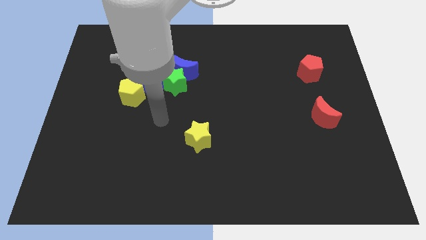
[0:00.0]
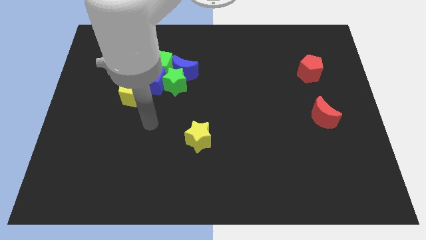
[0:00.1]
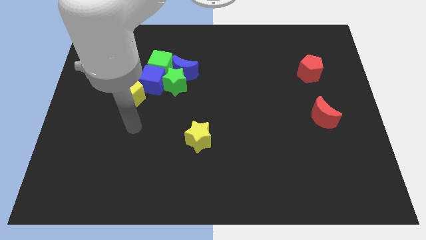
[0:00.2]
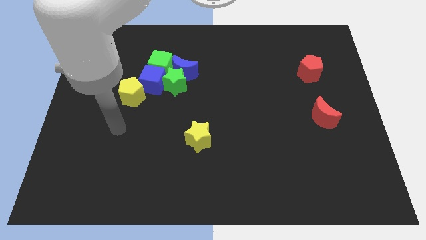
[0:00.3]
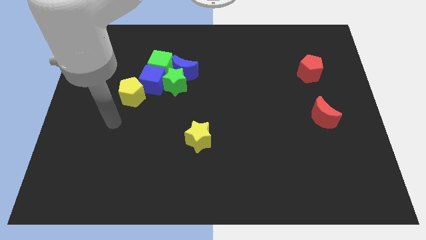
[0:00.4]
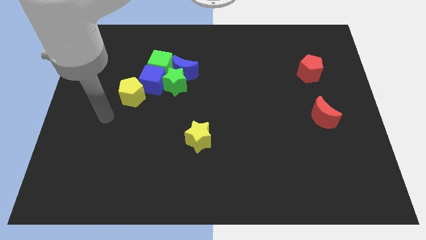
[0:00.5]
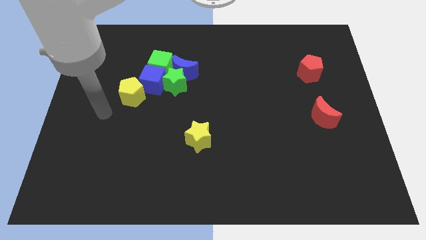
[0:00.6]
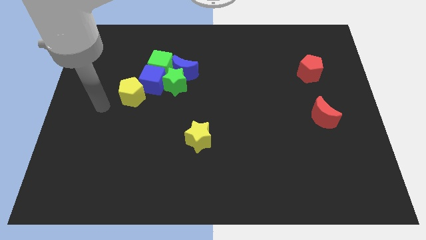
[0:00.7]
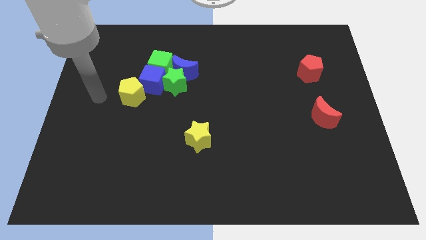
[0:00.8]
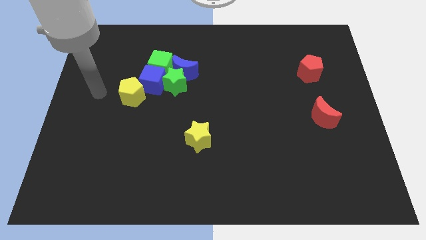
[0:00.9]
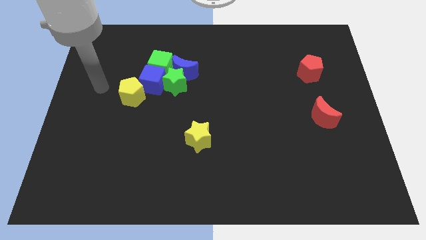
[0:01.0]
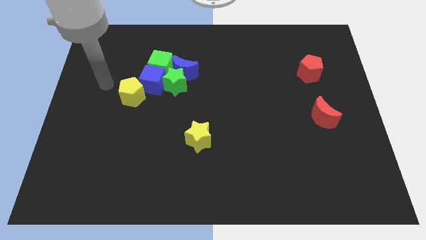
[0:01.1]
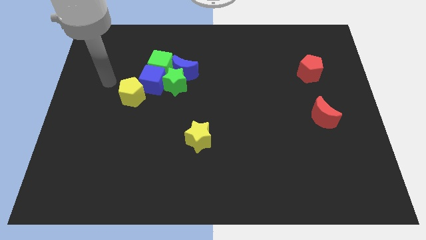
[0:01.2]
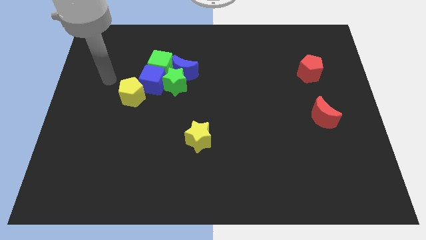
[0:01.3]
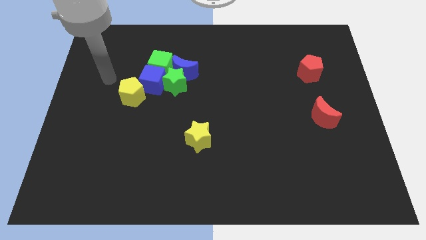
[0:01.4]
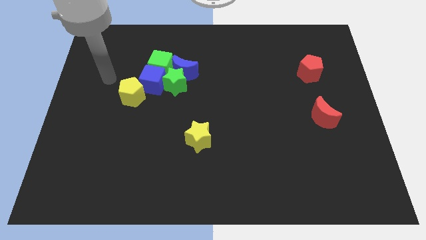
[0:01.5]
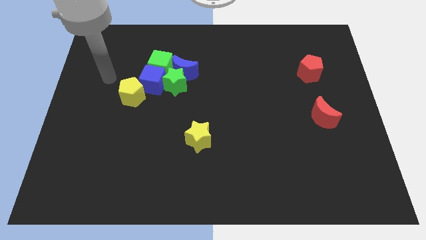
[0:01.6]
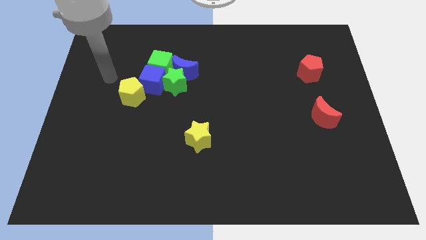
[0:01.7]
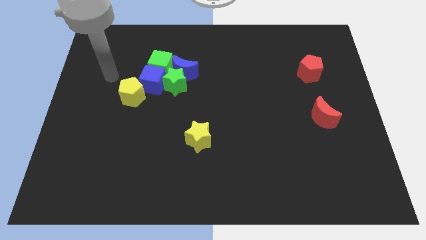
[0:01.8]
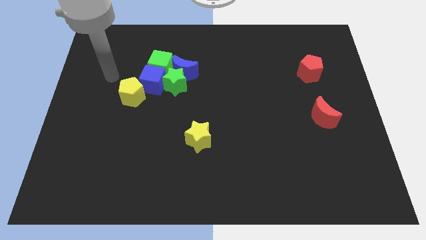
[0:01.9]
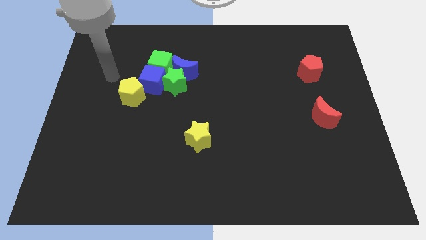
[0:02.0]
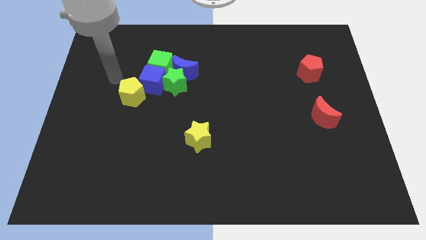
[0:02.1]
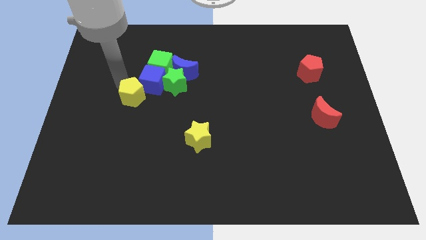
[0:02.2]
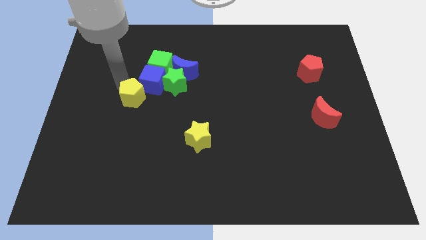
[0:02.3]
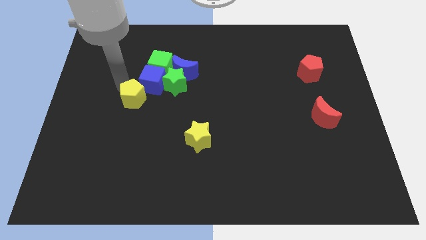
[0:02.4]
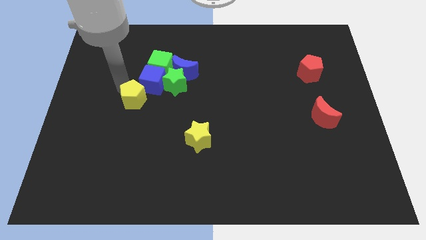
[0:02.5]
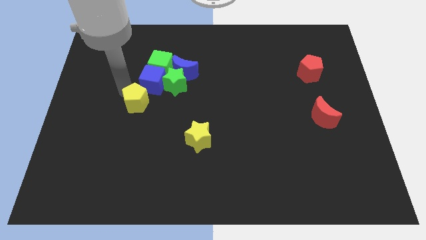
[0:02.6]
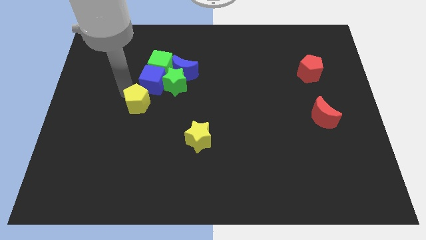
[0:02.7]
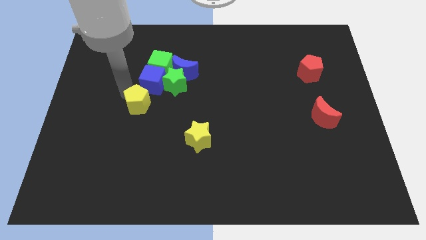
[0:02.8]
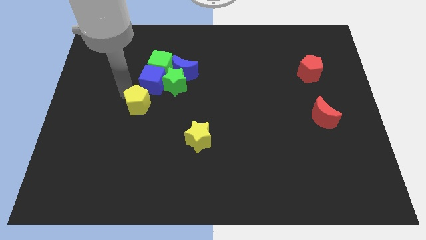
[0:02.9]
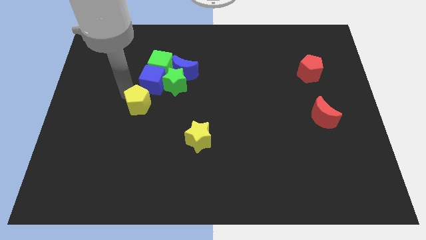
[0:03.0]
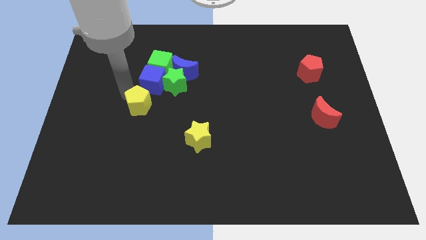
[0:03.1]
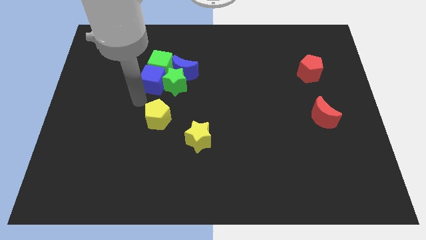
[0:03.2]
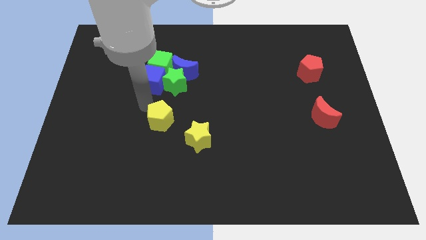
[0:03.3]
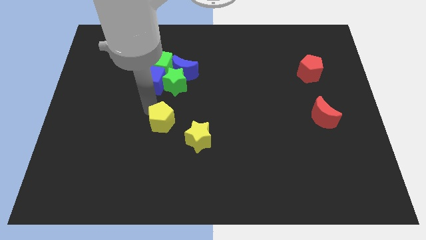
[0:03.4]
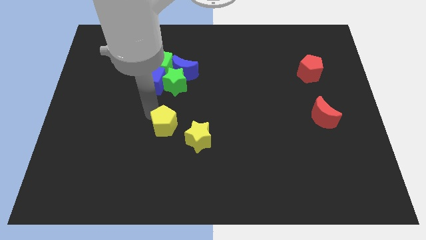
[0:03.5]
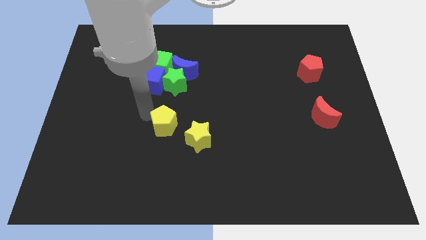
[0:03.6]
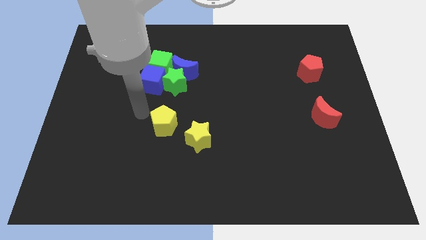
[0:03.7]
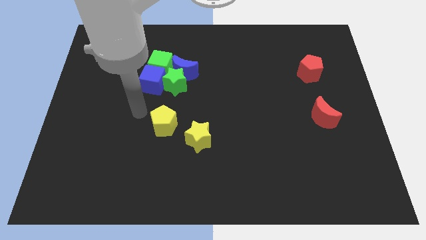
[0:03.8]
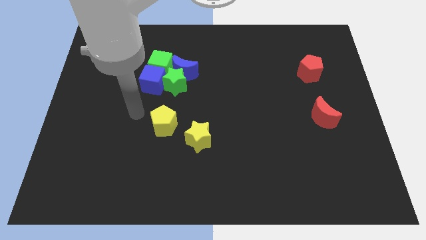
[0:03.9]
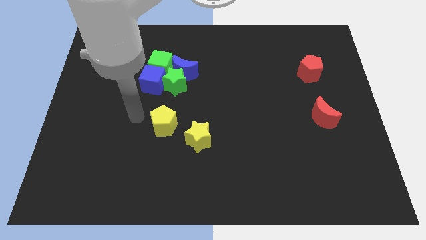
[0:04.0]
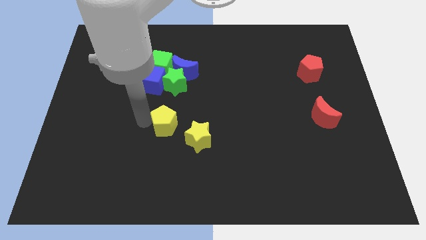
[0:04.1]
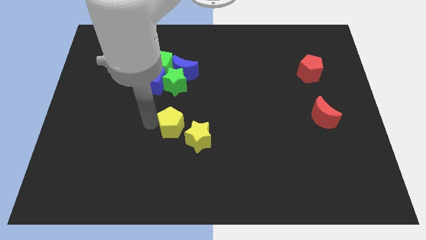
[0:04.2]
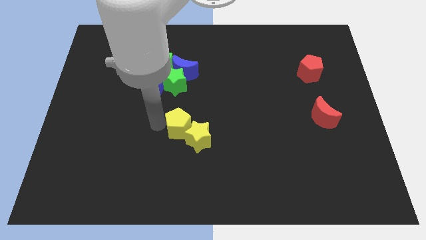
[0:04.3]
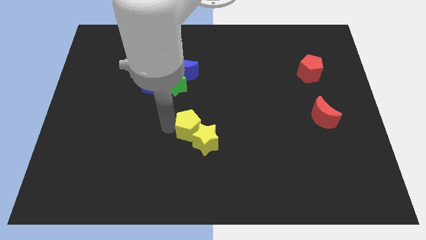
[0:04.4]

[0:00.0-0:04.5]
slide the yellow pentagon into the yellow star

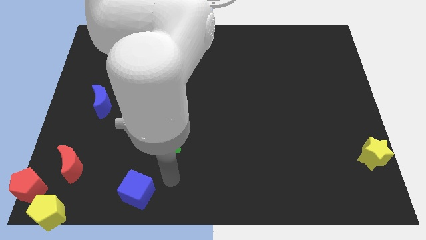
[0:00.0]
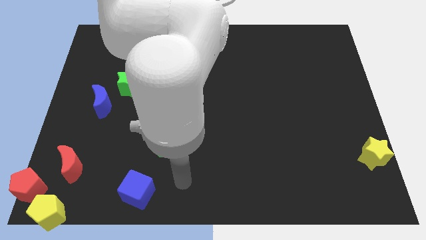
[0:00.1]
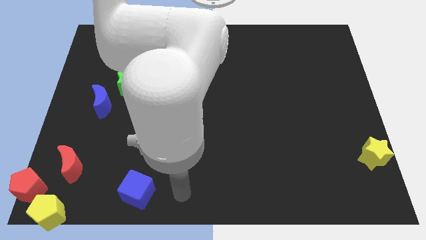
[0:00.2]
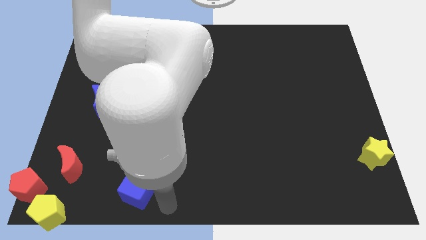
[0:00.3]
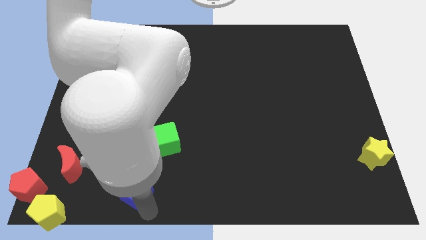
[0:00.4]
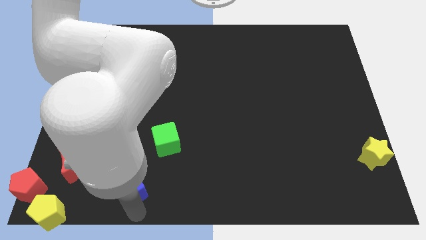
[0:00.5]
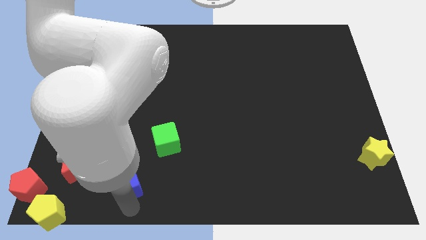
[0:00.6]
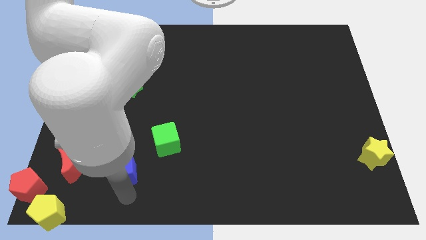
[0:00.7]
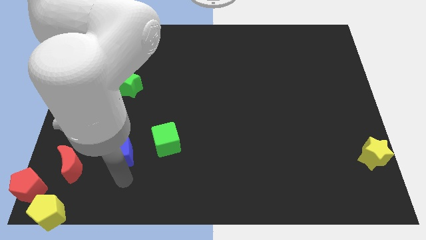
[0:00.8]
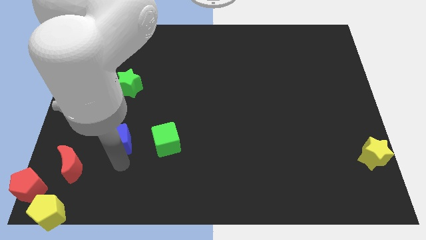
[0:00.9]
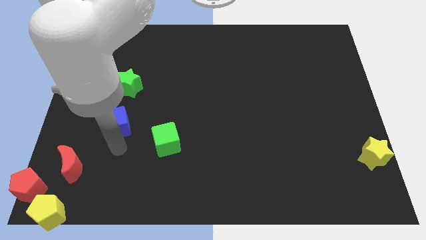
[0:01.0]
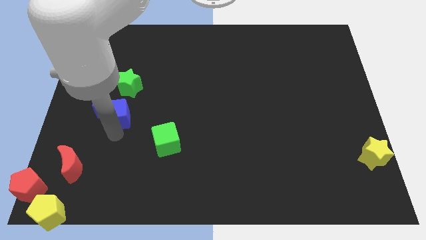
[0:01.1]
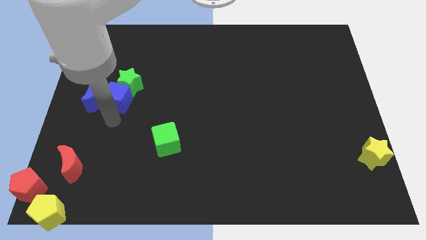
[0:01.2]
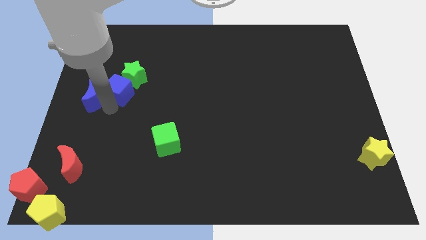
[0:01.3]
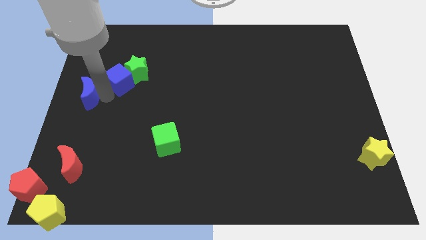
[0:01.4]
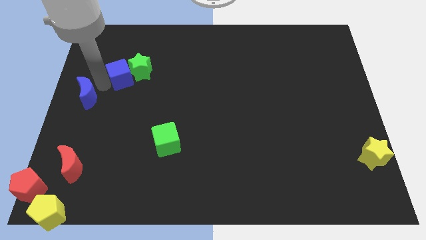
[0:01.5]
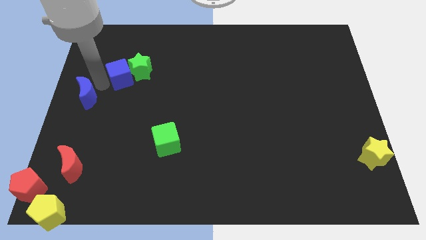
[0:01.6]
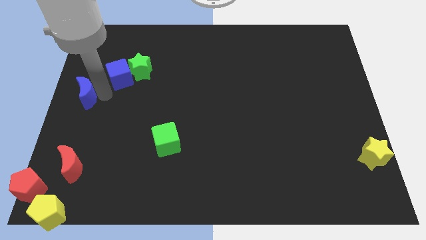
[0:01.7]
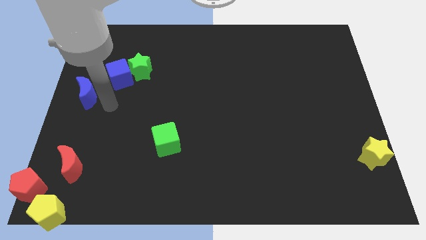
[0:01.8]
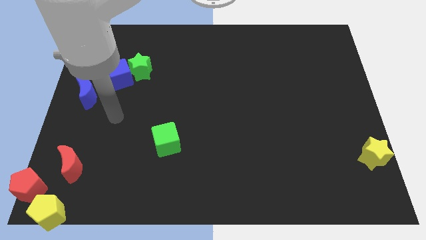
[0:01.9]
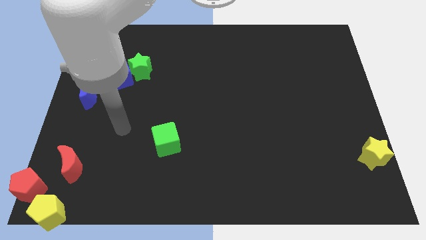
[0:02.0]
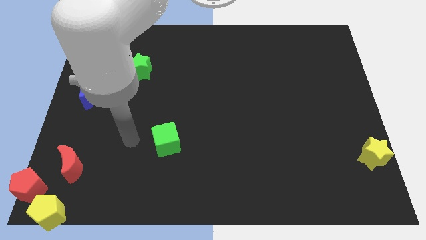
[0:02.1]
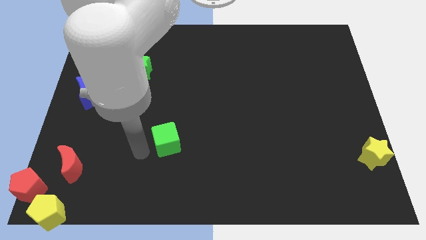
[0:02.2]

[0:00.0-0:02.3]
push blue cube in to green star

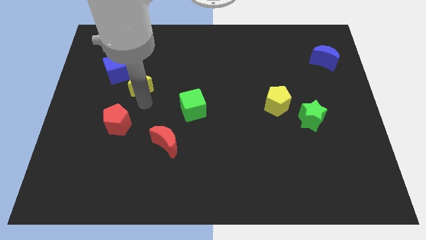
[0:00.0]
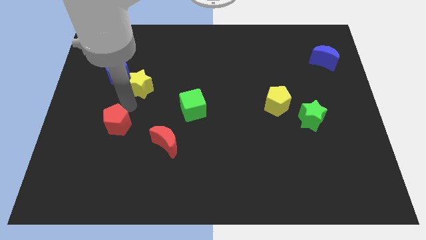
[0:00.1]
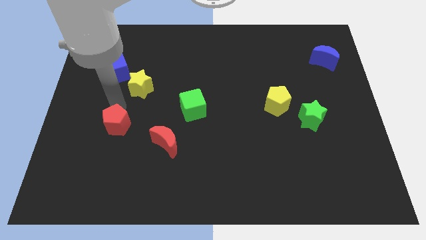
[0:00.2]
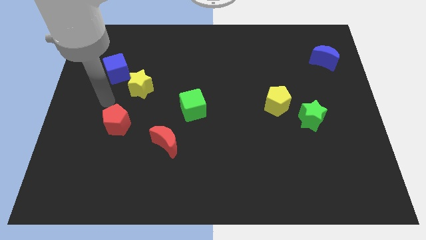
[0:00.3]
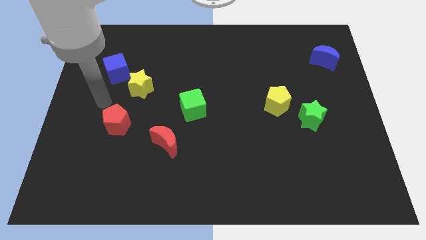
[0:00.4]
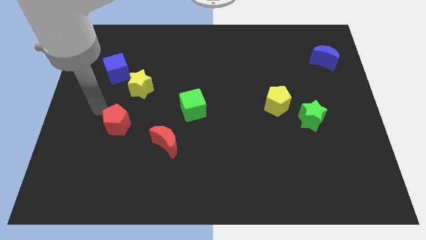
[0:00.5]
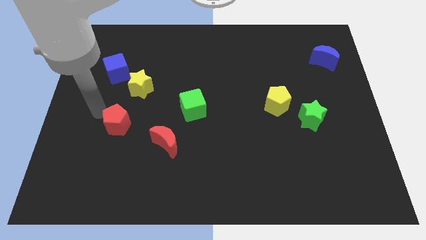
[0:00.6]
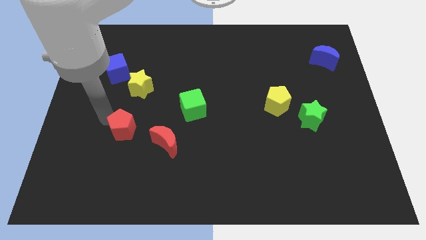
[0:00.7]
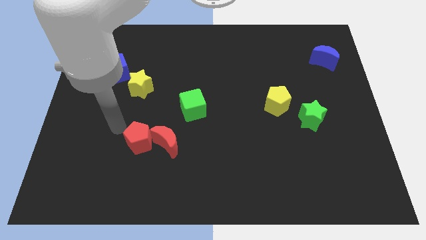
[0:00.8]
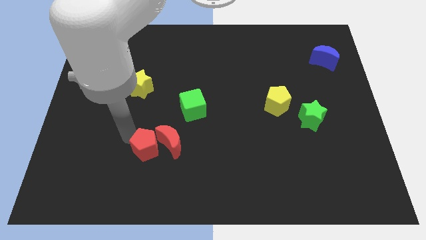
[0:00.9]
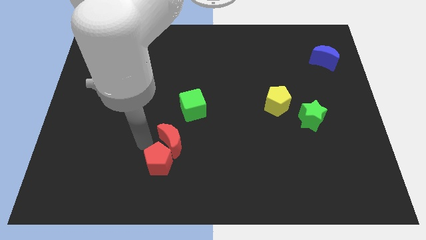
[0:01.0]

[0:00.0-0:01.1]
push the red pentagon into the red crescent

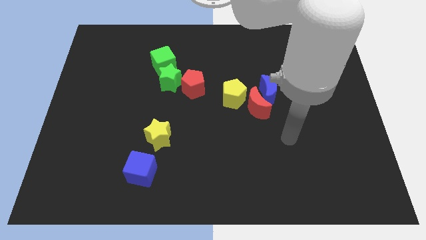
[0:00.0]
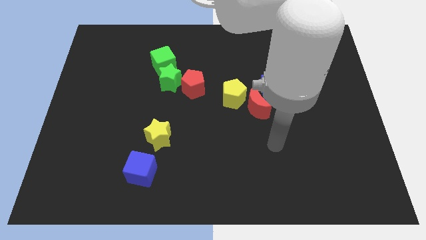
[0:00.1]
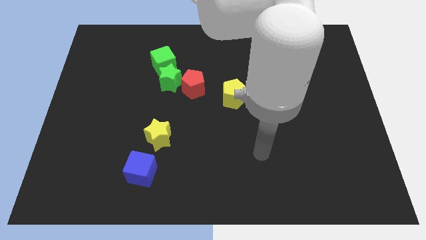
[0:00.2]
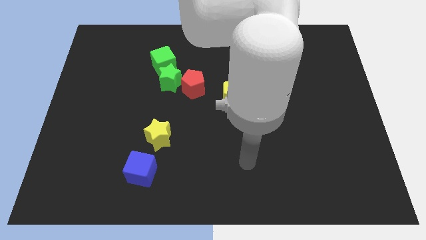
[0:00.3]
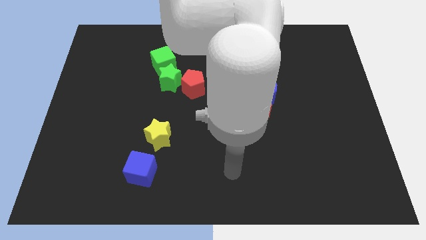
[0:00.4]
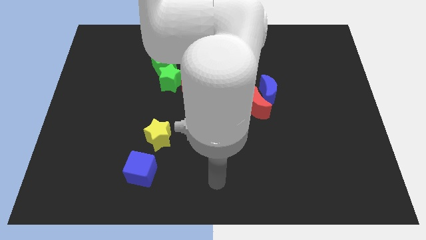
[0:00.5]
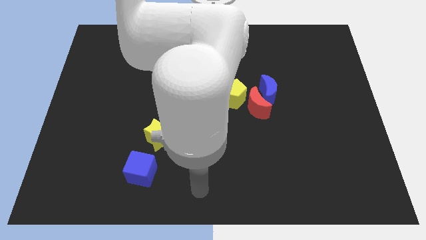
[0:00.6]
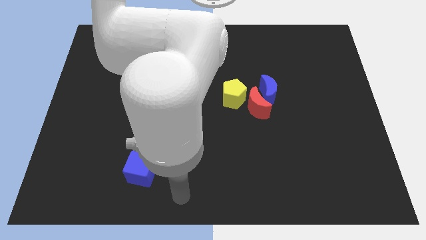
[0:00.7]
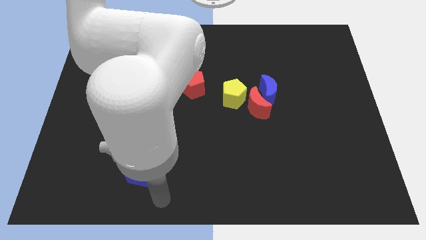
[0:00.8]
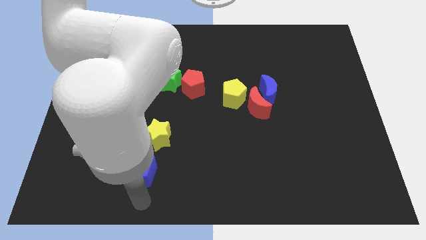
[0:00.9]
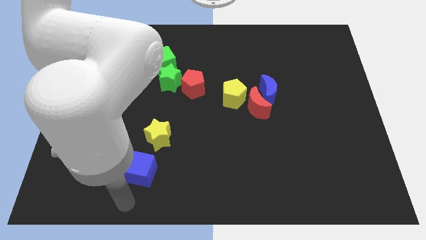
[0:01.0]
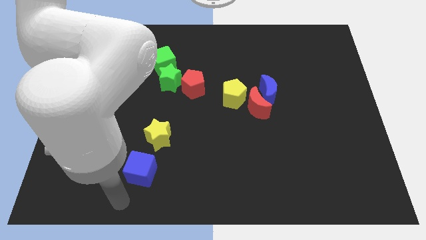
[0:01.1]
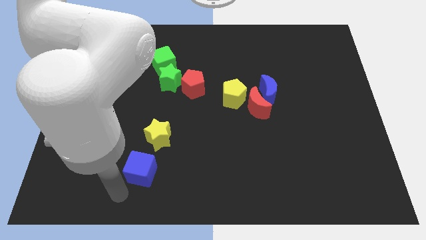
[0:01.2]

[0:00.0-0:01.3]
place the arm below the blue cube
